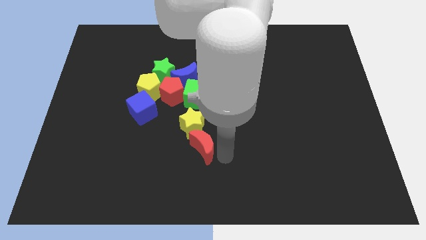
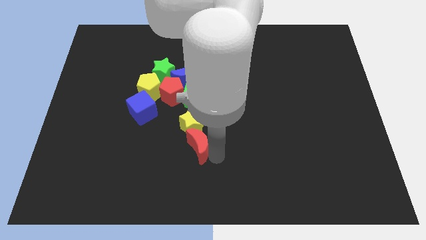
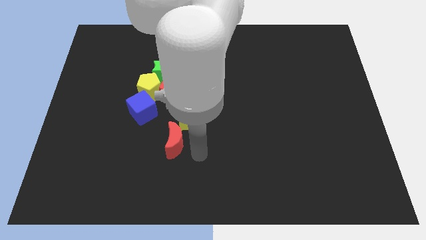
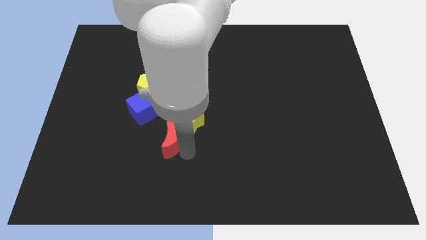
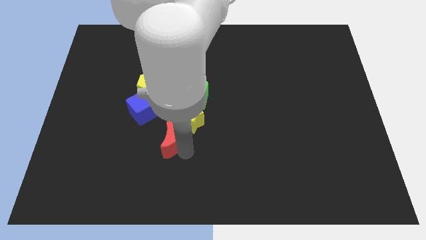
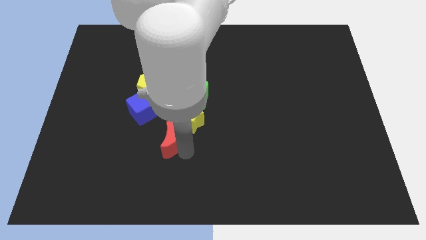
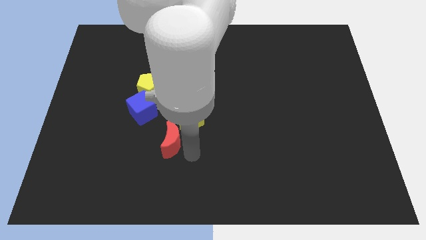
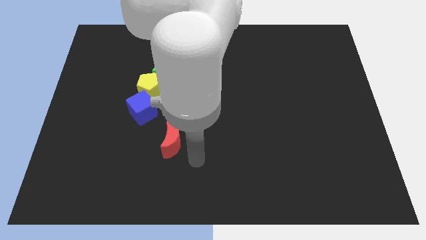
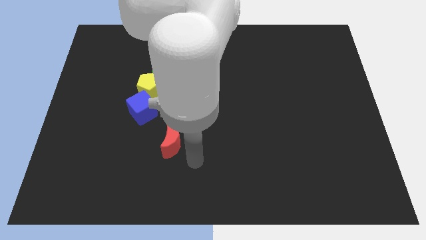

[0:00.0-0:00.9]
push the red crescent to the bottom left of the yellow star

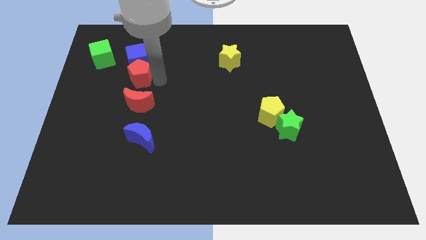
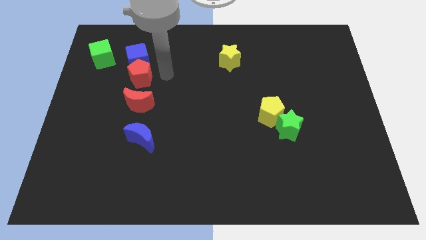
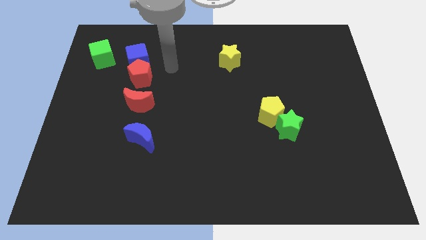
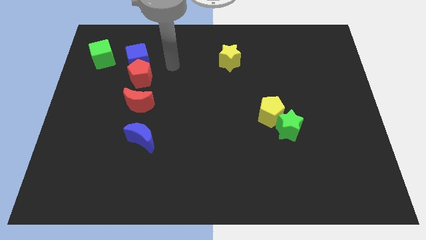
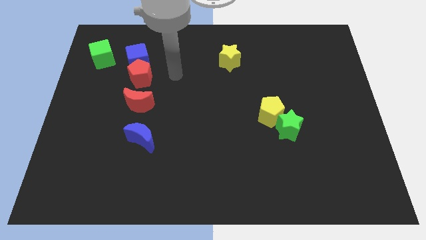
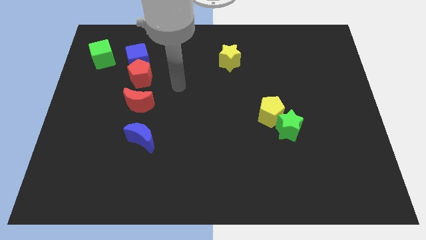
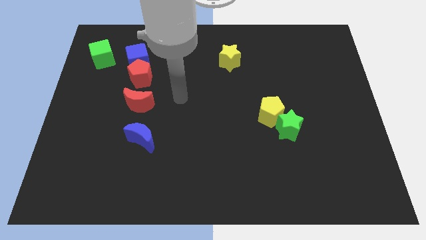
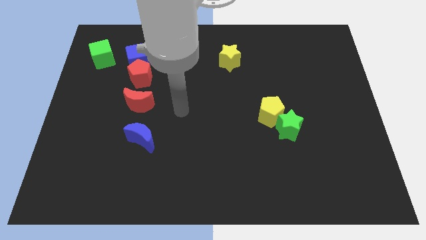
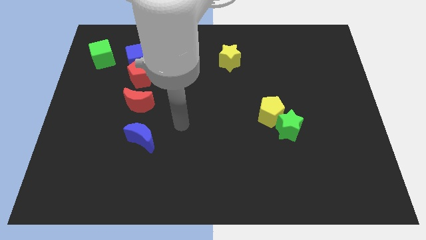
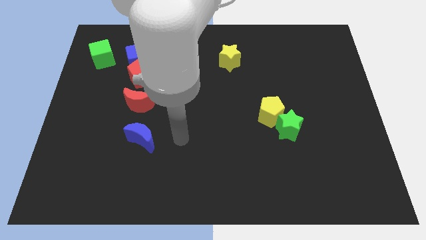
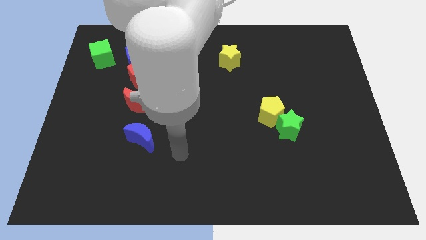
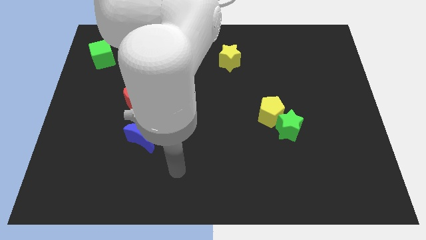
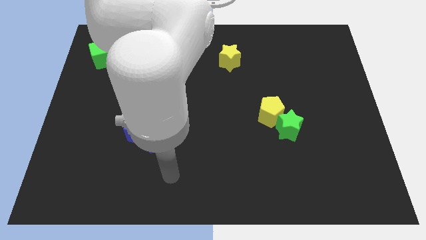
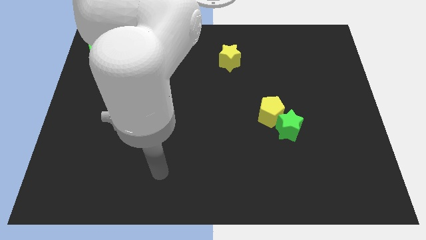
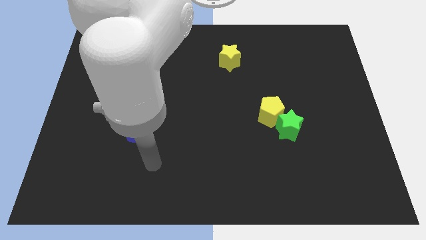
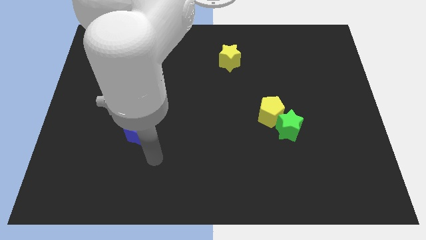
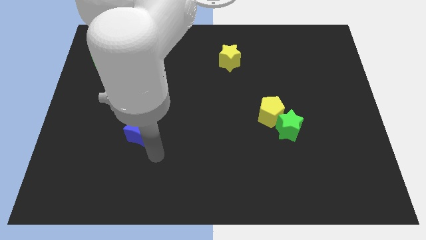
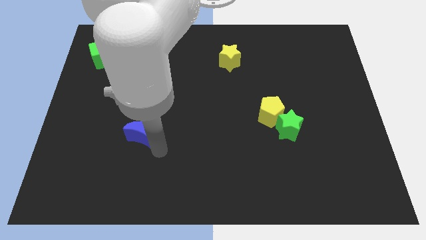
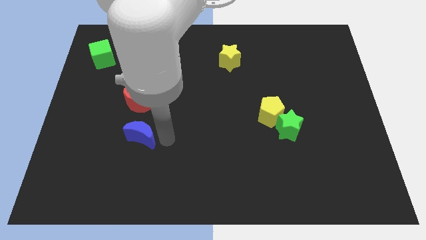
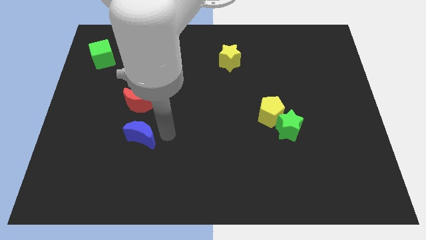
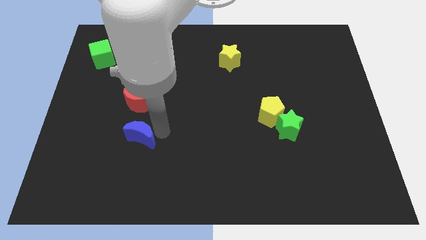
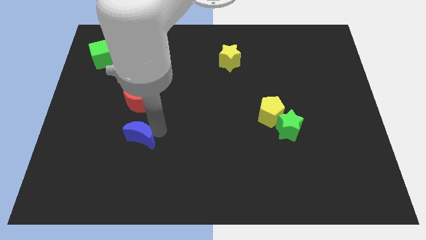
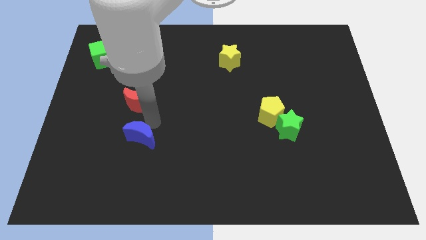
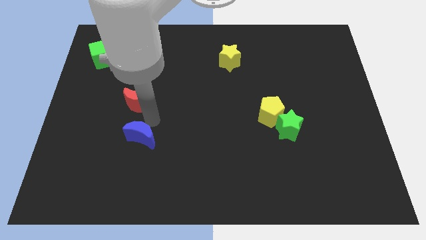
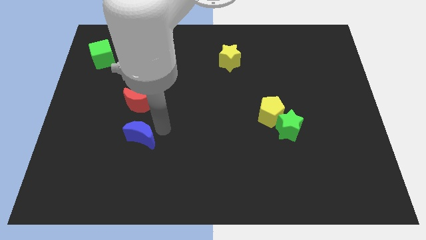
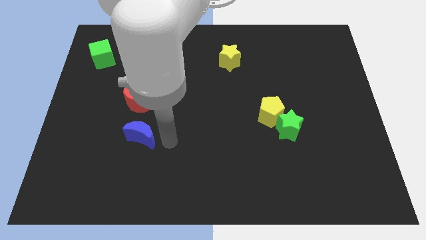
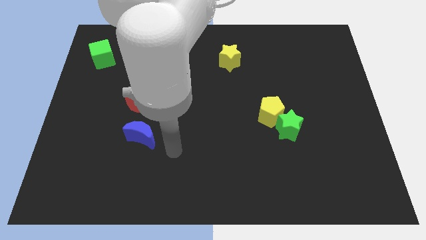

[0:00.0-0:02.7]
move the arm towards the right of the blue crescent

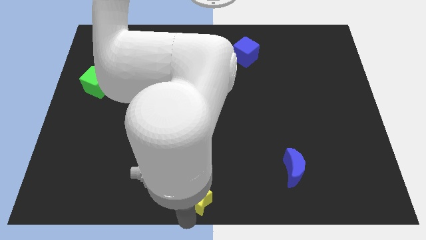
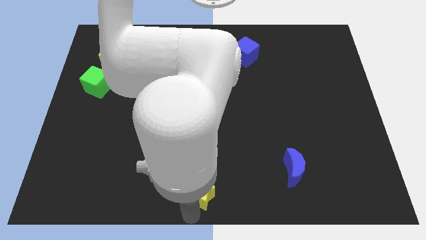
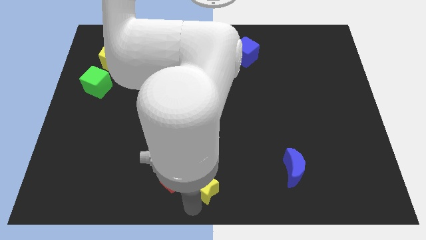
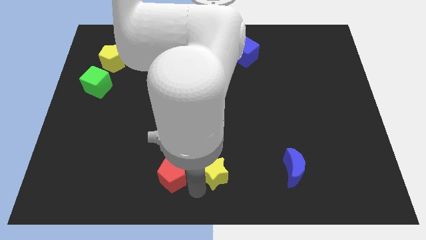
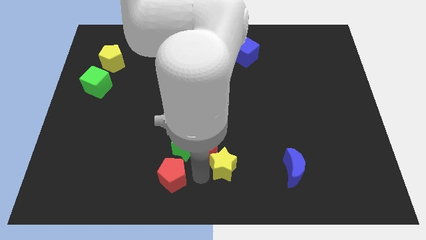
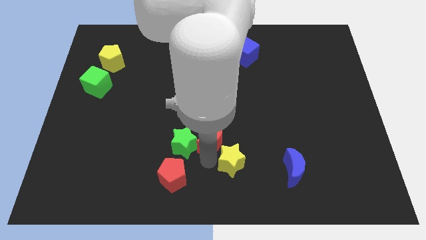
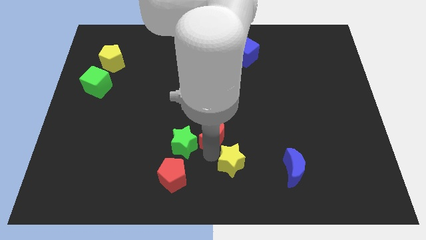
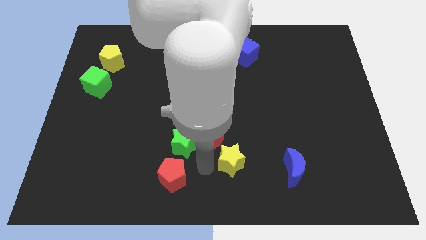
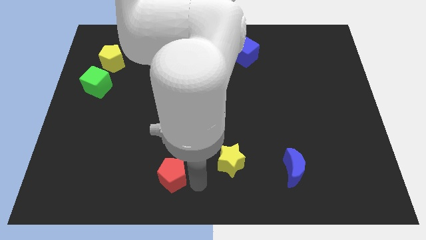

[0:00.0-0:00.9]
push the red crescent to the top

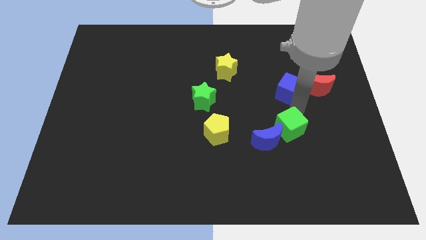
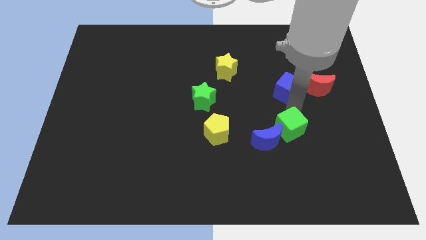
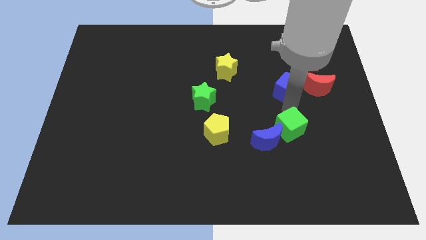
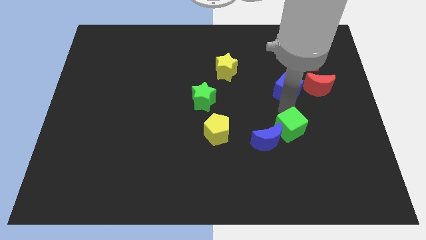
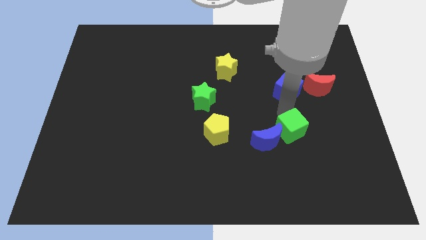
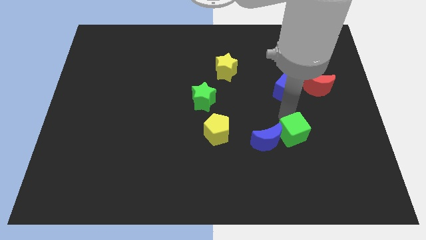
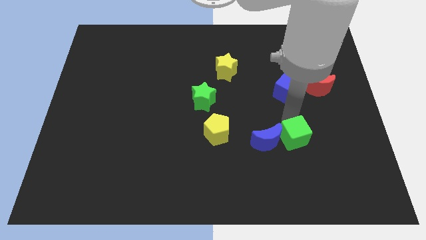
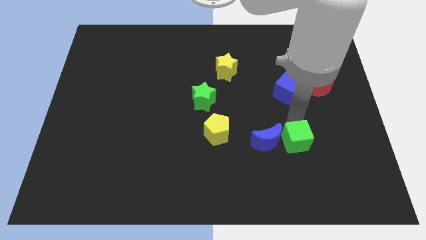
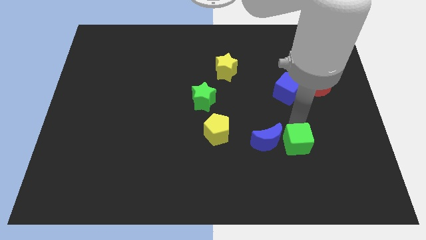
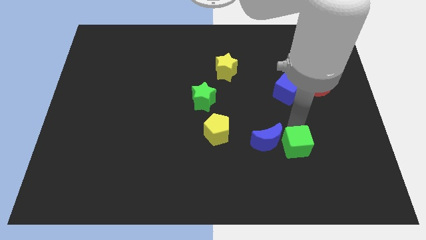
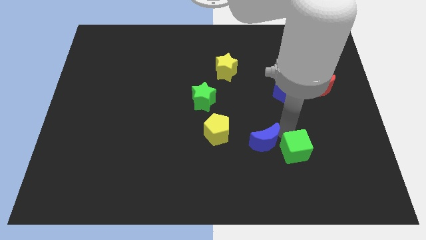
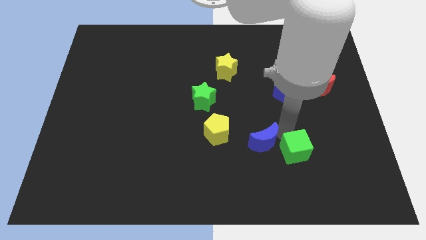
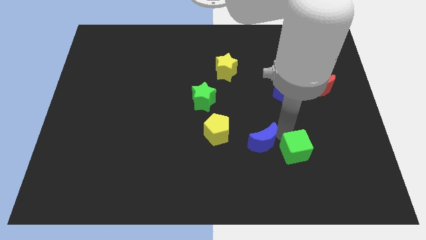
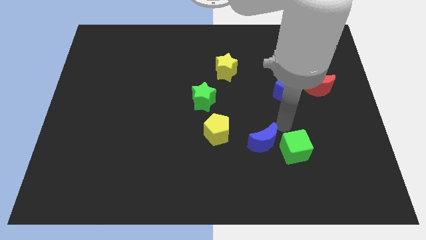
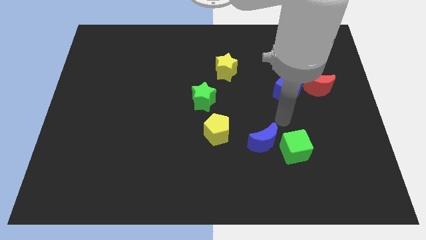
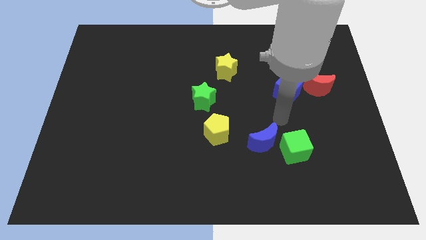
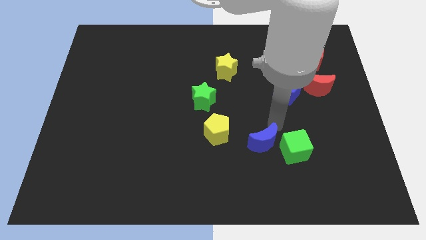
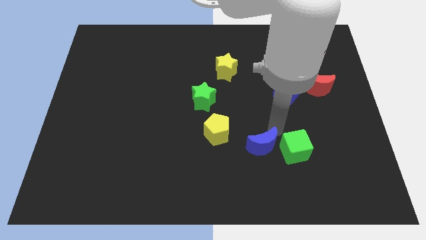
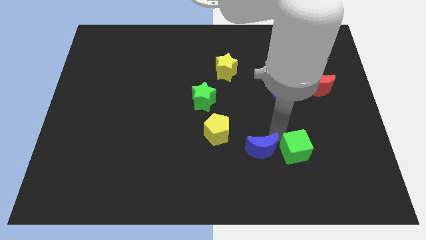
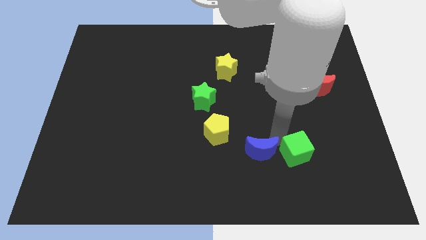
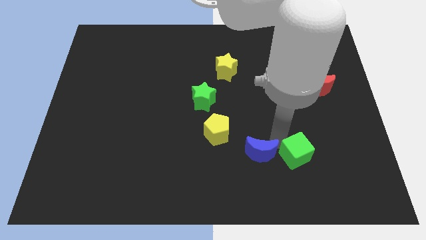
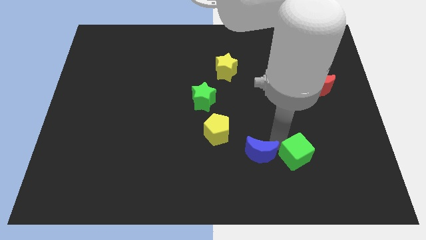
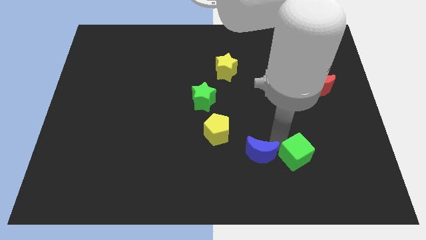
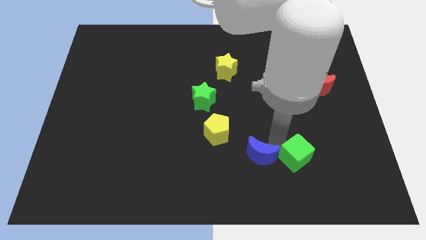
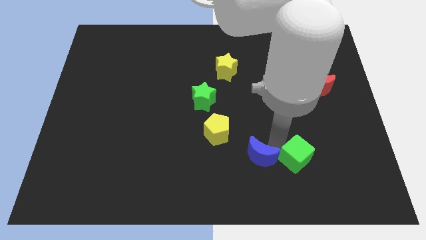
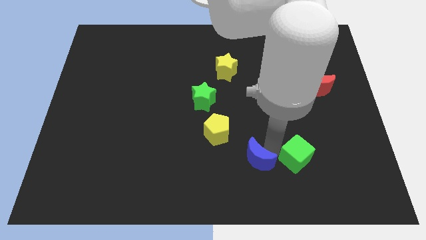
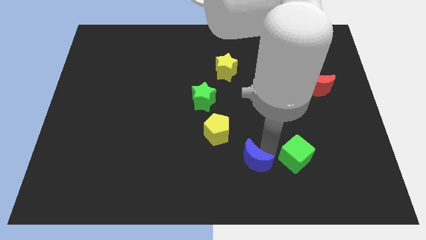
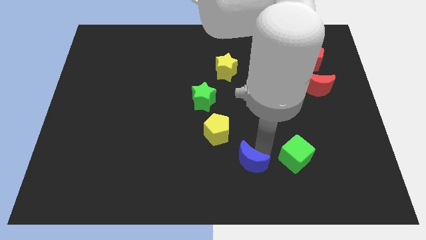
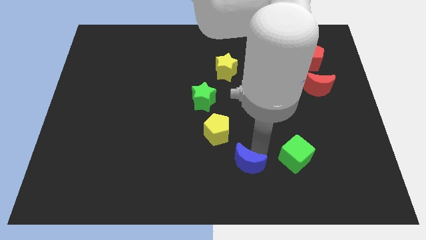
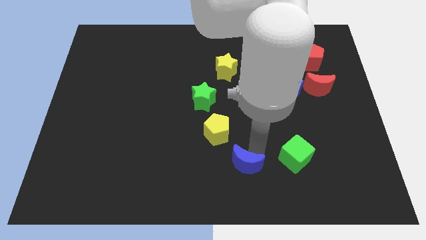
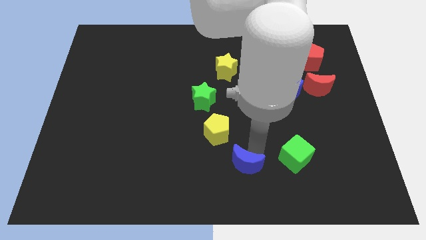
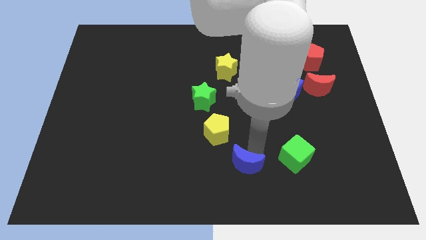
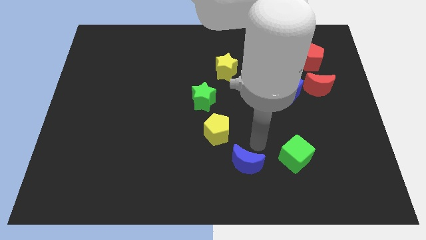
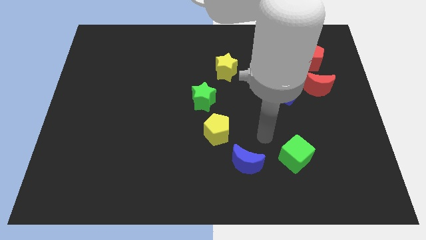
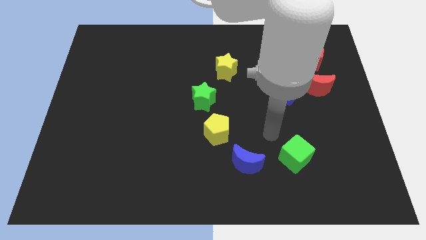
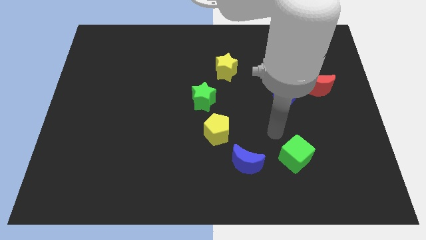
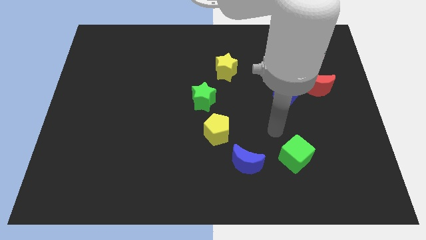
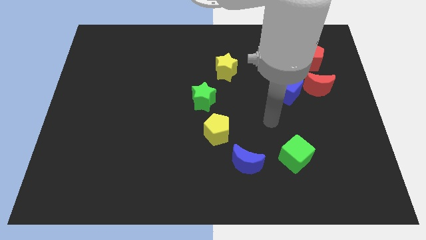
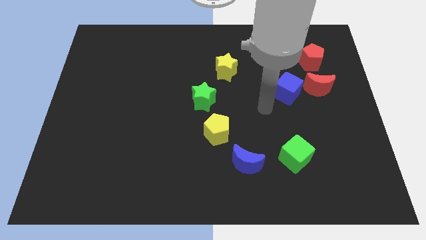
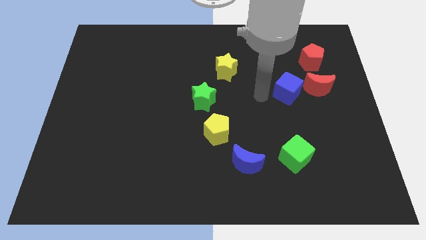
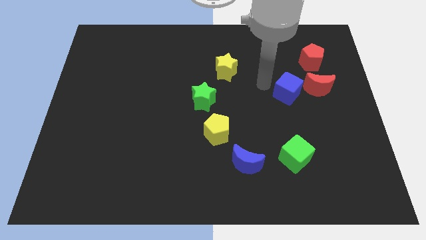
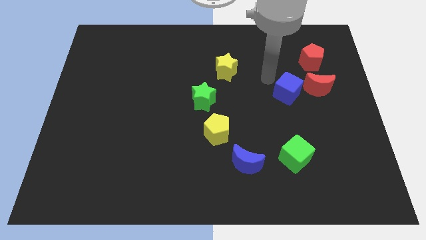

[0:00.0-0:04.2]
separate the blue moon from the green cube

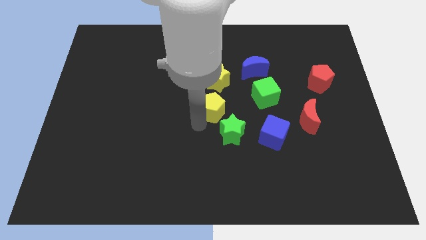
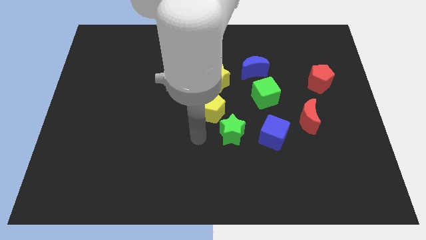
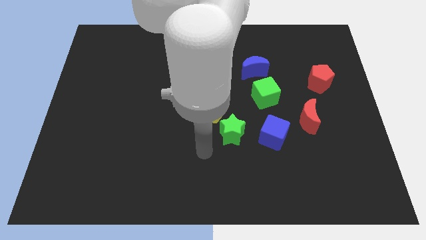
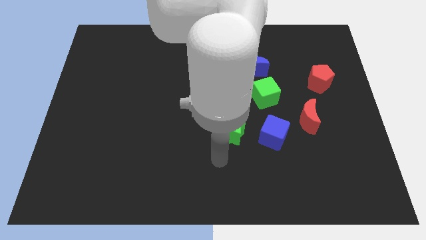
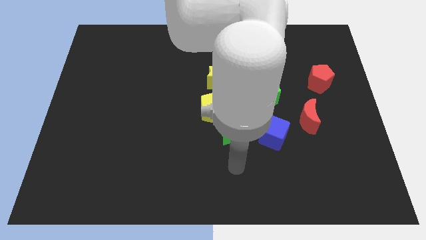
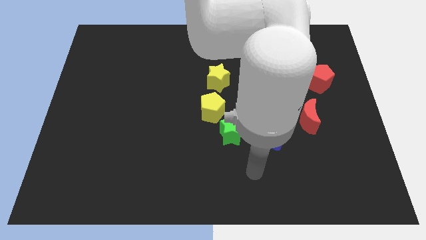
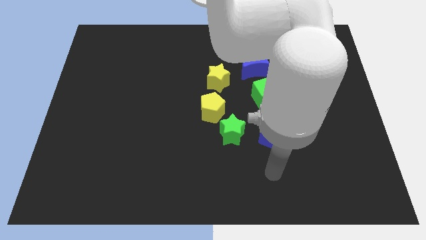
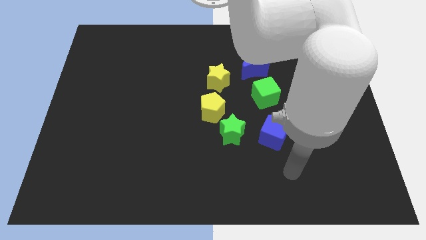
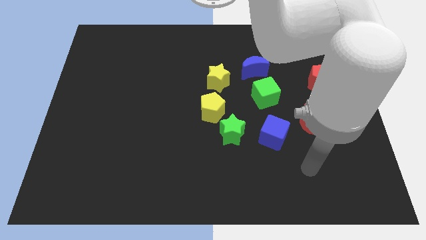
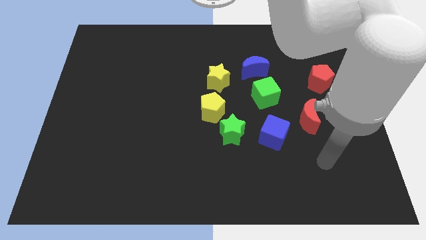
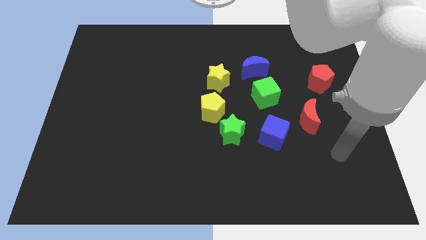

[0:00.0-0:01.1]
move the arm away from the yellow pentagon
